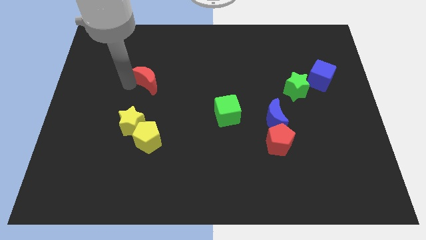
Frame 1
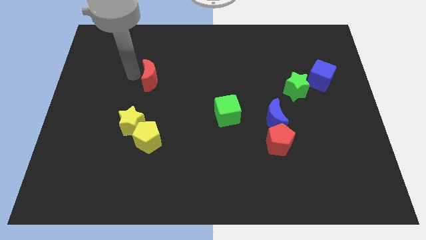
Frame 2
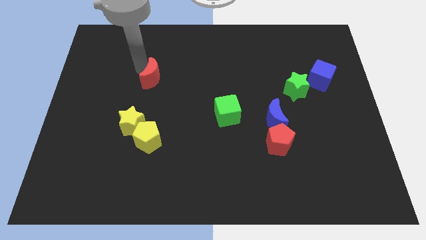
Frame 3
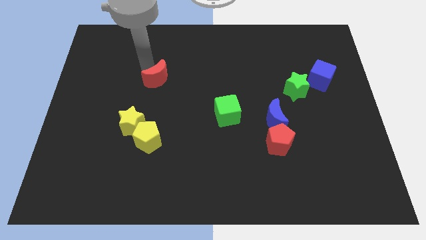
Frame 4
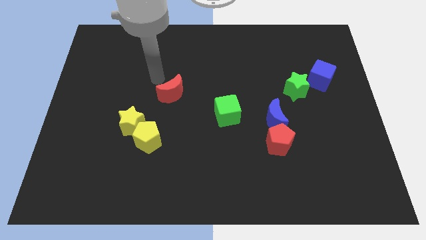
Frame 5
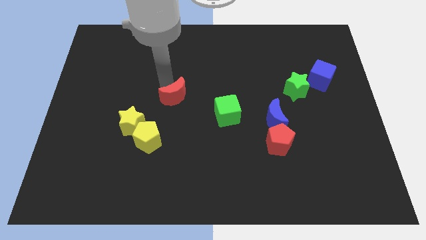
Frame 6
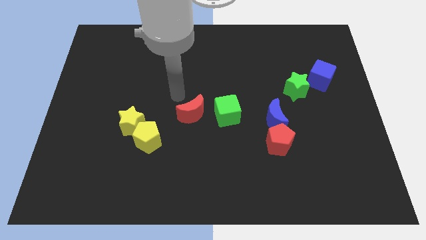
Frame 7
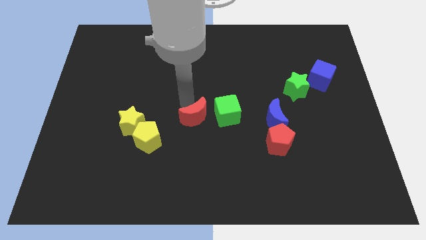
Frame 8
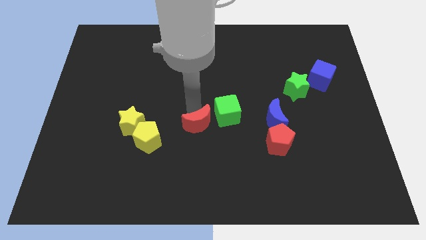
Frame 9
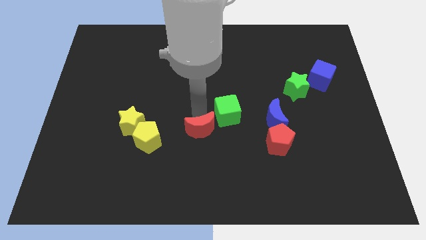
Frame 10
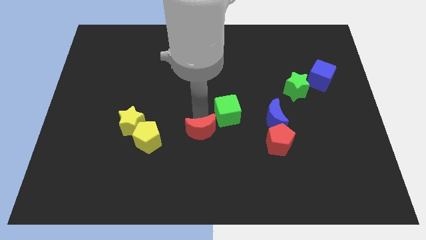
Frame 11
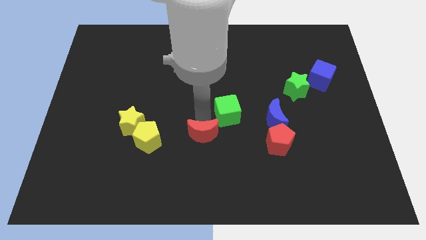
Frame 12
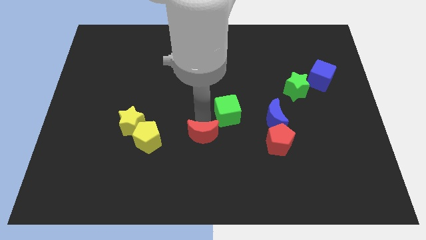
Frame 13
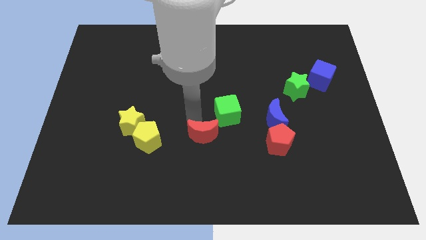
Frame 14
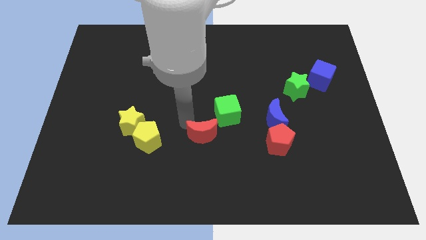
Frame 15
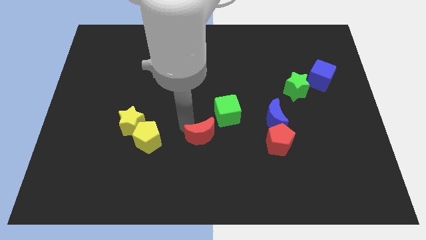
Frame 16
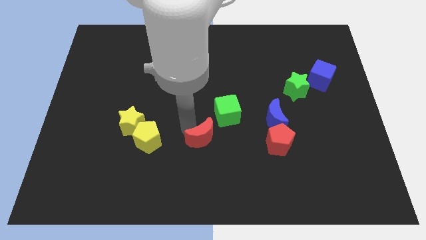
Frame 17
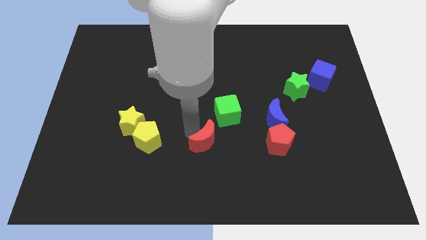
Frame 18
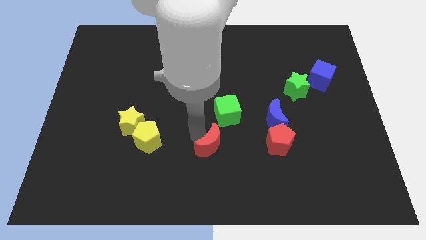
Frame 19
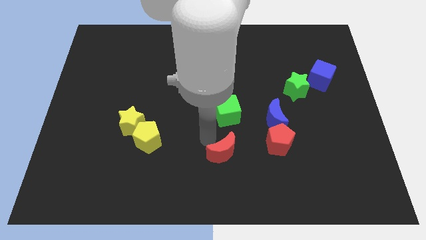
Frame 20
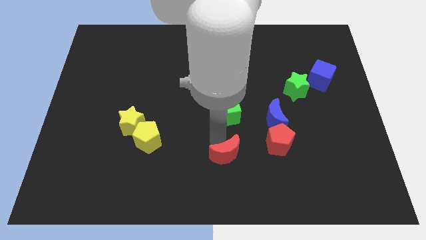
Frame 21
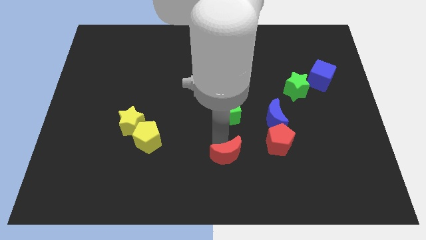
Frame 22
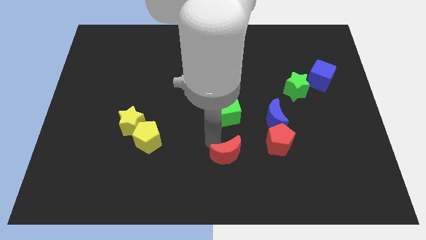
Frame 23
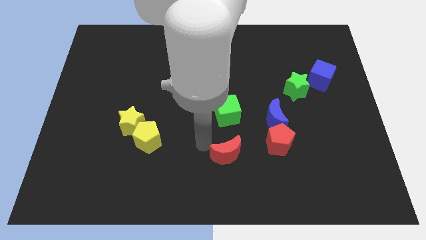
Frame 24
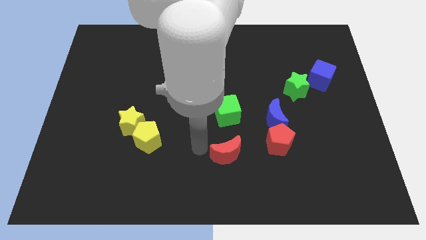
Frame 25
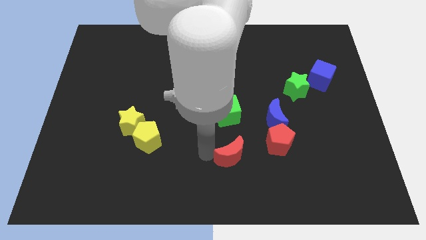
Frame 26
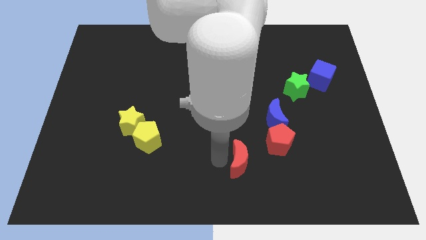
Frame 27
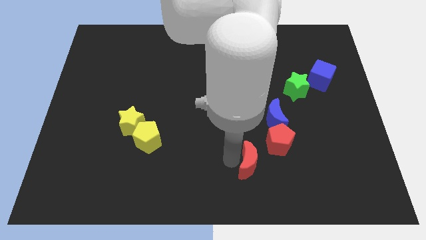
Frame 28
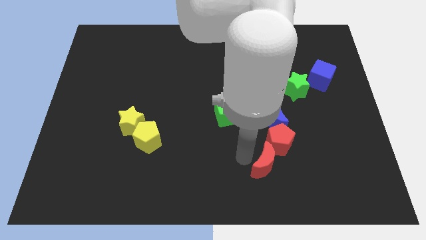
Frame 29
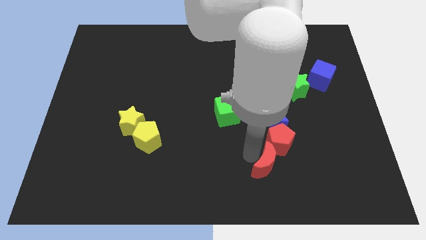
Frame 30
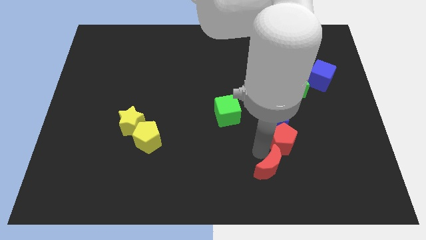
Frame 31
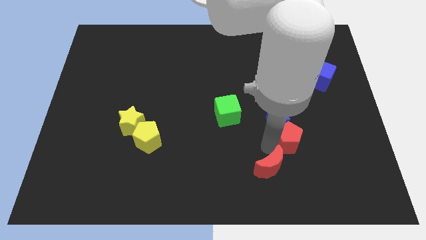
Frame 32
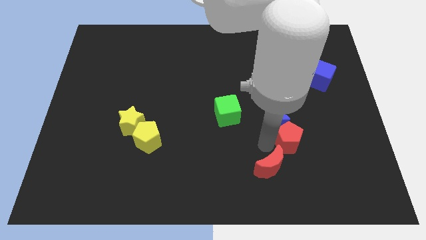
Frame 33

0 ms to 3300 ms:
slide the red crescent below the red pentagon

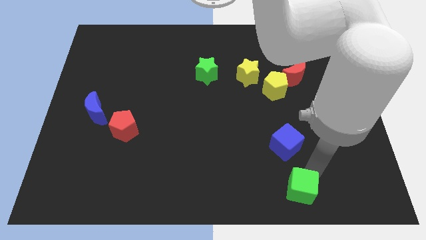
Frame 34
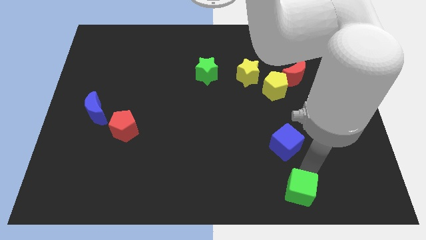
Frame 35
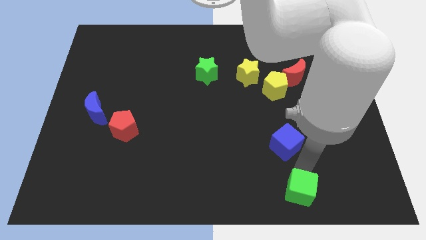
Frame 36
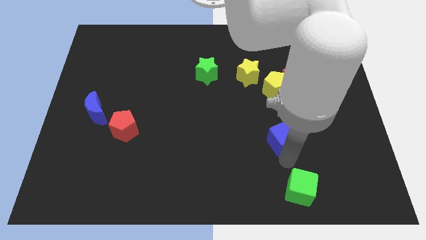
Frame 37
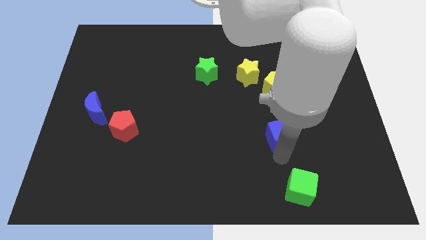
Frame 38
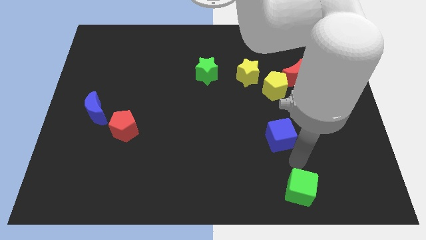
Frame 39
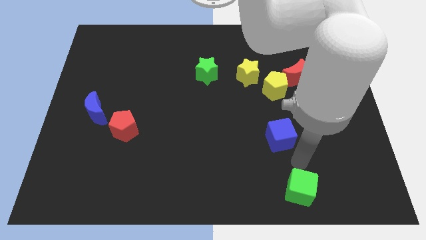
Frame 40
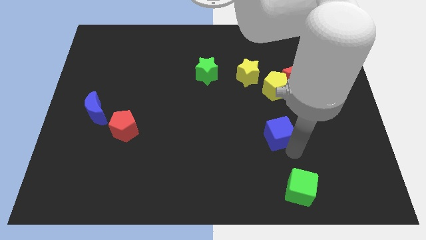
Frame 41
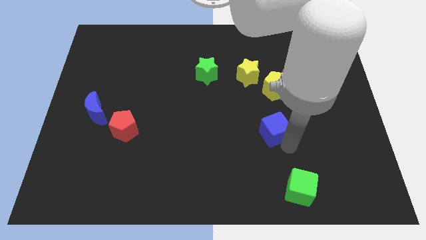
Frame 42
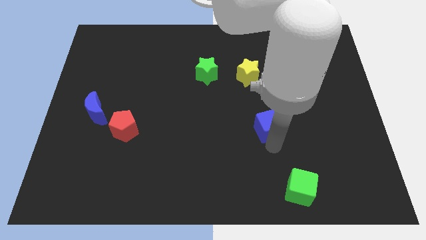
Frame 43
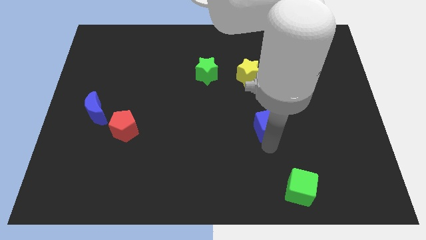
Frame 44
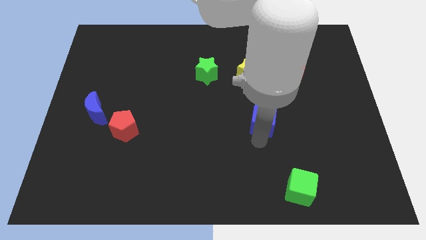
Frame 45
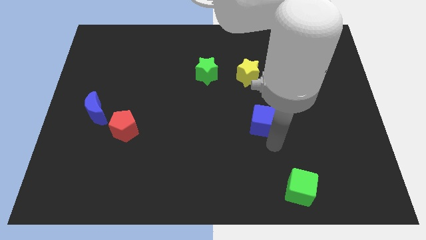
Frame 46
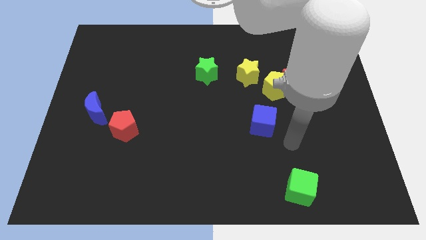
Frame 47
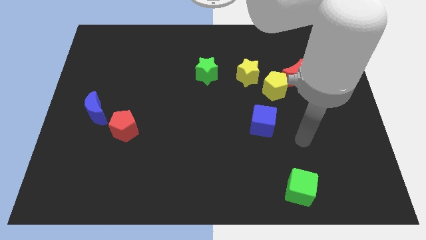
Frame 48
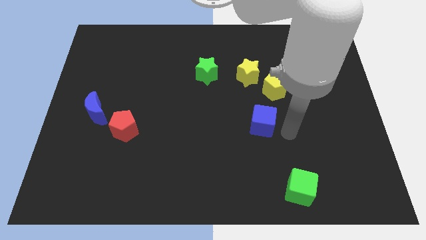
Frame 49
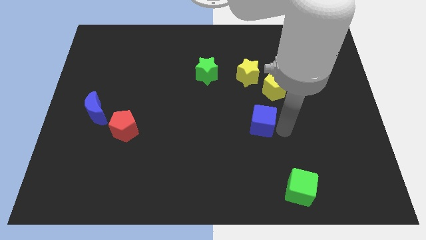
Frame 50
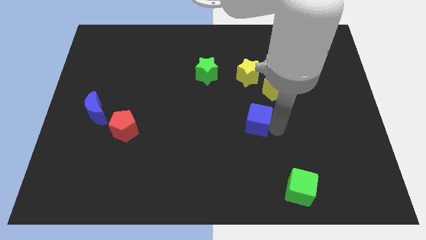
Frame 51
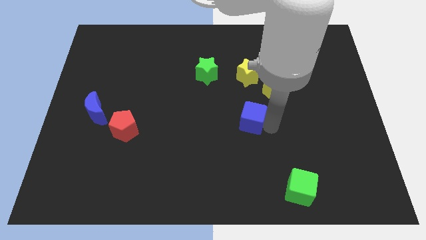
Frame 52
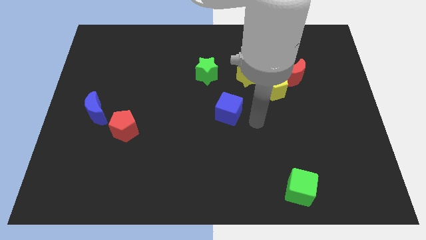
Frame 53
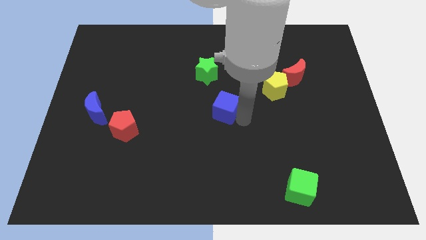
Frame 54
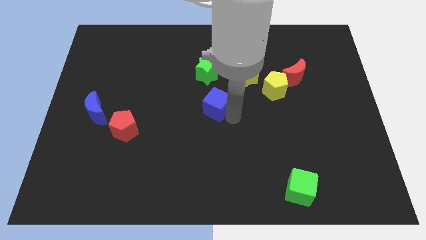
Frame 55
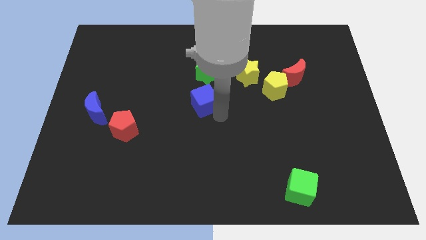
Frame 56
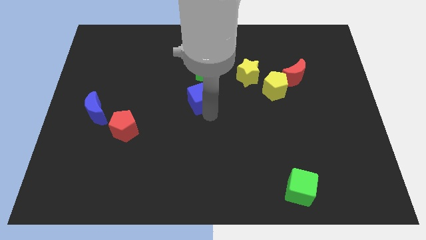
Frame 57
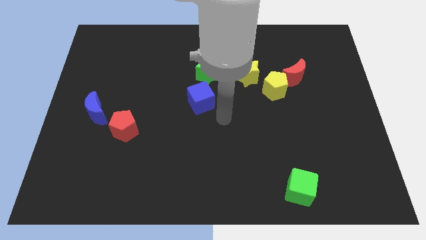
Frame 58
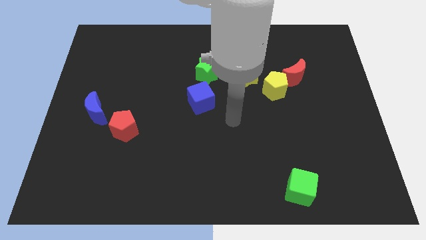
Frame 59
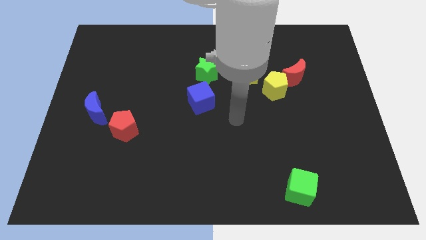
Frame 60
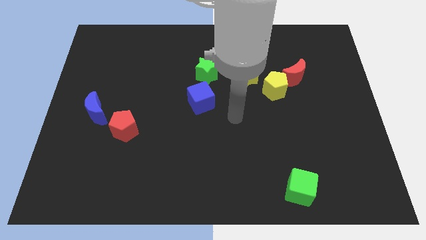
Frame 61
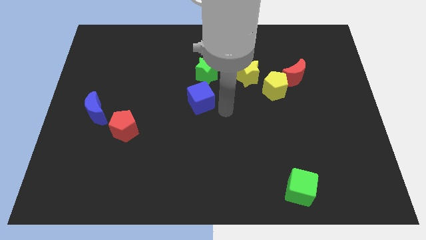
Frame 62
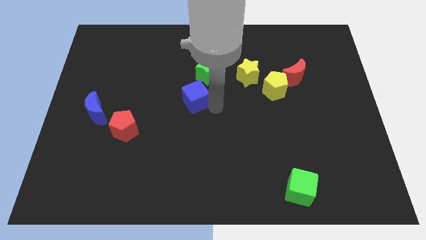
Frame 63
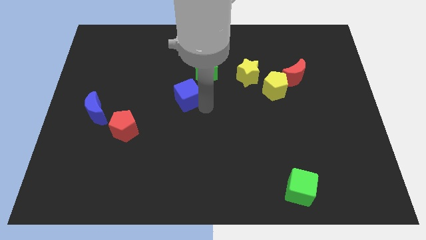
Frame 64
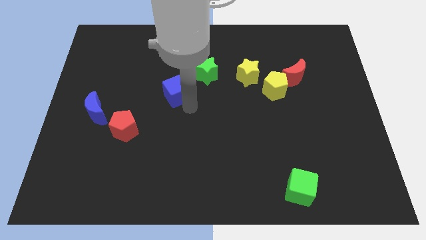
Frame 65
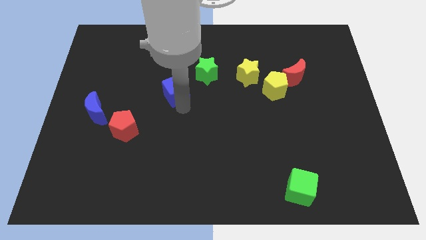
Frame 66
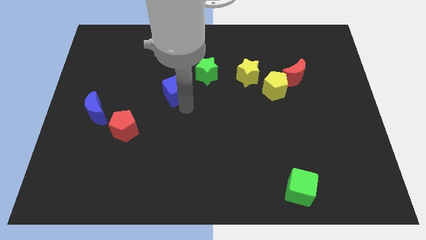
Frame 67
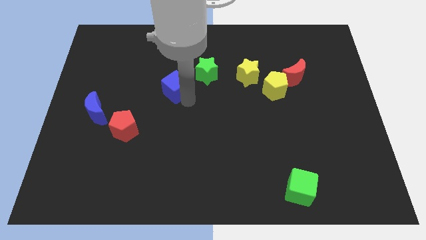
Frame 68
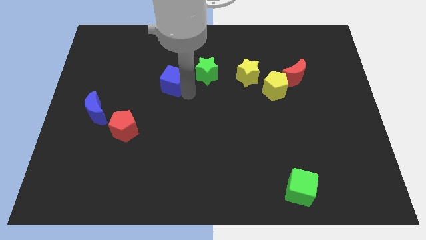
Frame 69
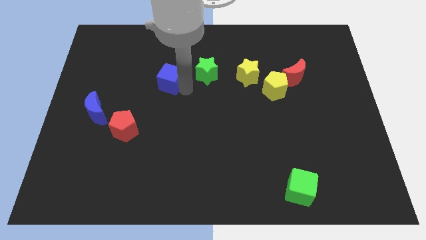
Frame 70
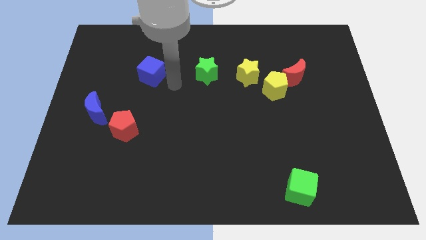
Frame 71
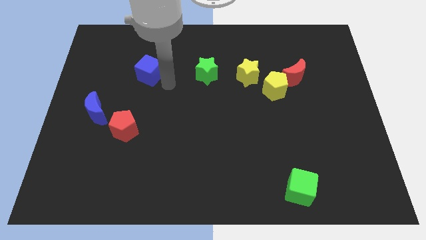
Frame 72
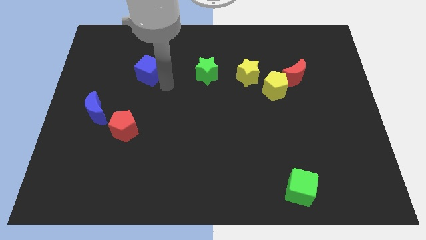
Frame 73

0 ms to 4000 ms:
move the blue cube parallel to the green star

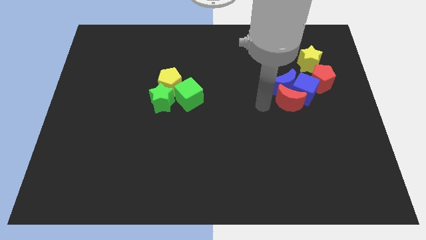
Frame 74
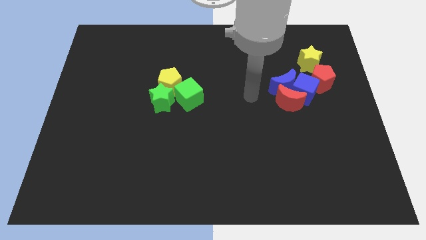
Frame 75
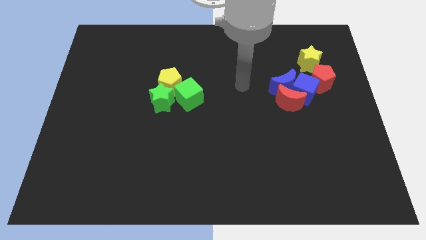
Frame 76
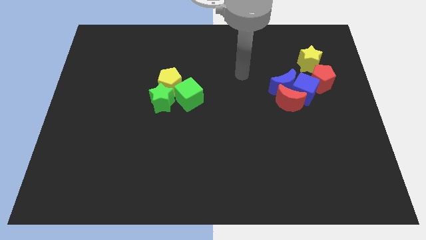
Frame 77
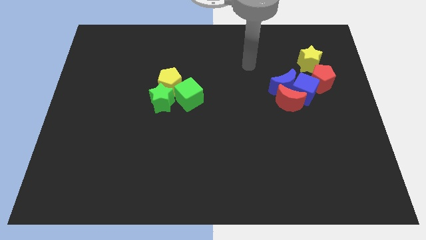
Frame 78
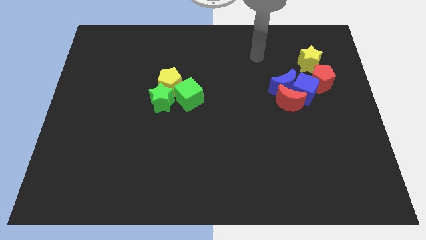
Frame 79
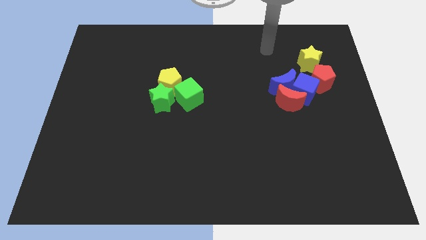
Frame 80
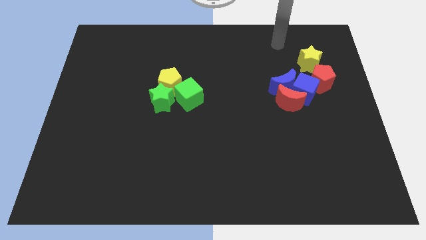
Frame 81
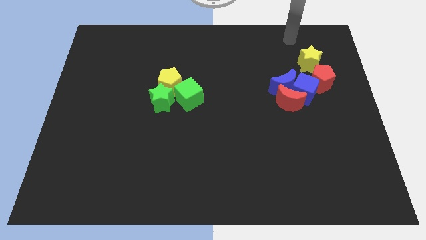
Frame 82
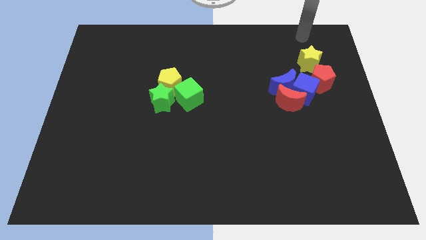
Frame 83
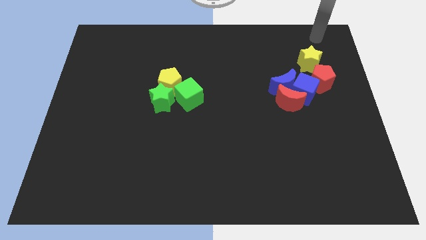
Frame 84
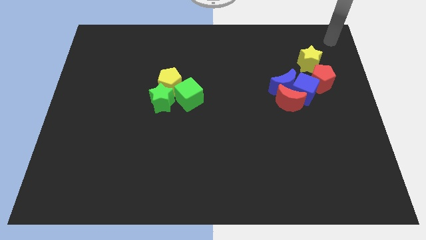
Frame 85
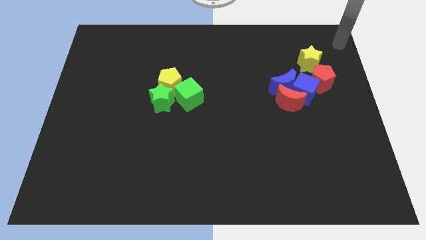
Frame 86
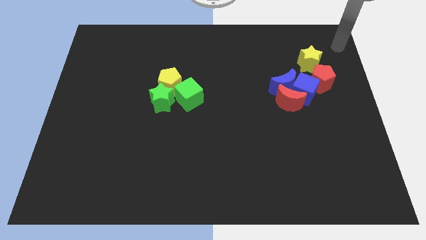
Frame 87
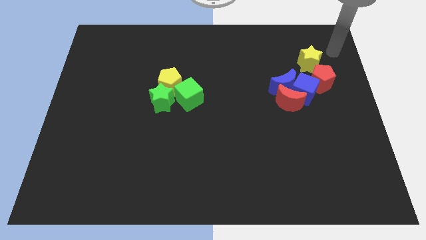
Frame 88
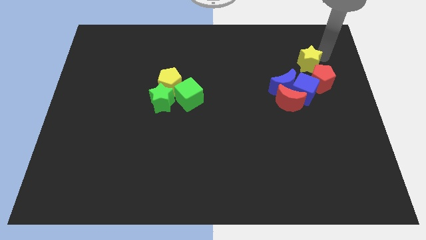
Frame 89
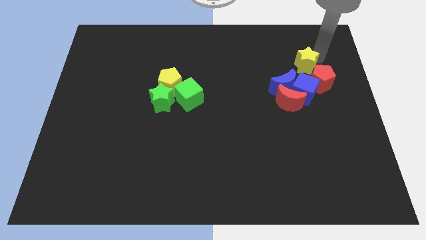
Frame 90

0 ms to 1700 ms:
place the arm right to the yellow star
